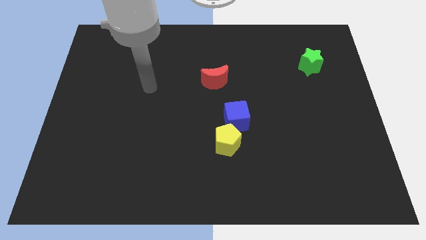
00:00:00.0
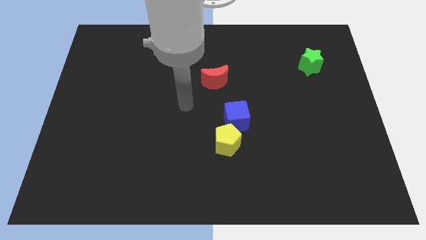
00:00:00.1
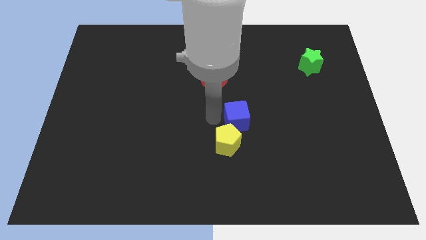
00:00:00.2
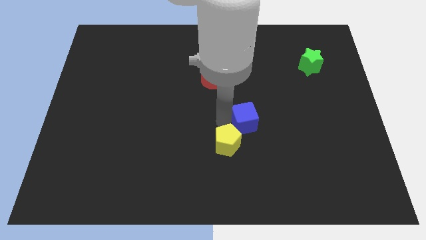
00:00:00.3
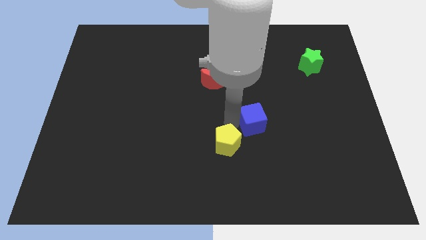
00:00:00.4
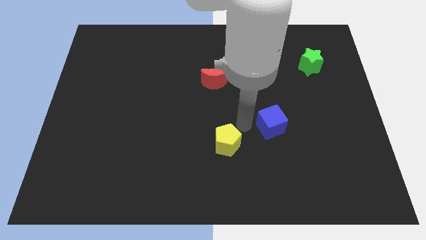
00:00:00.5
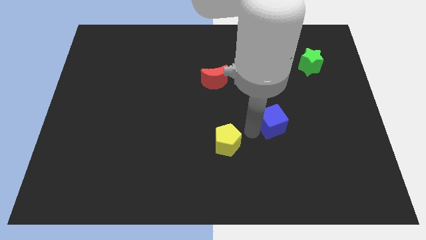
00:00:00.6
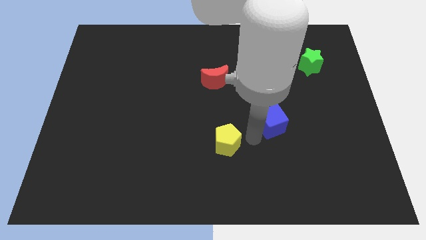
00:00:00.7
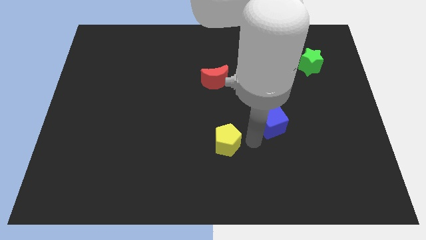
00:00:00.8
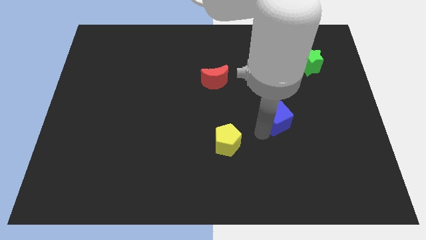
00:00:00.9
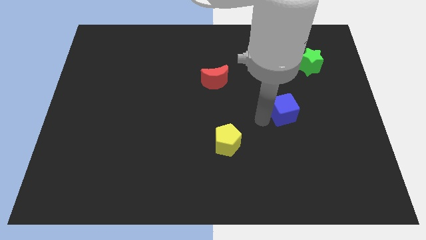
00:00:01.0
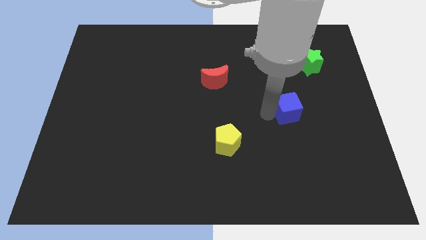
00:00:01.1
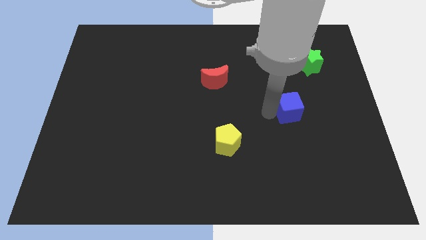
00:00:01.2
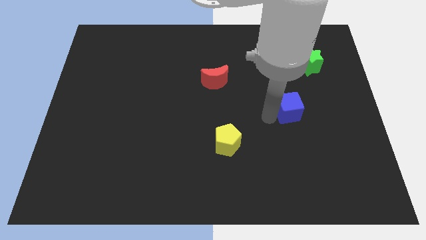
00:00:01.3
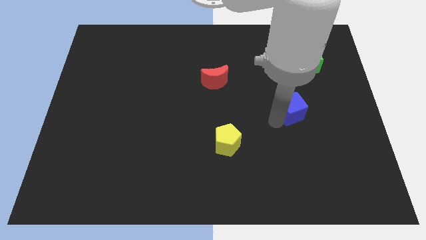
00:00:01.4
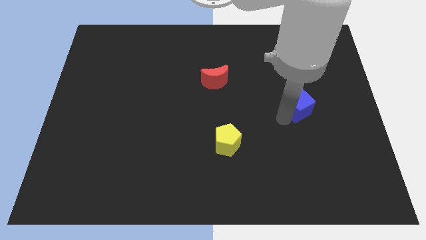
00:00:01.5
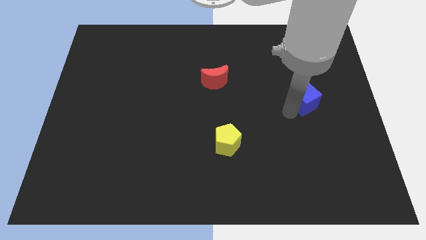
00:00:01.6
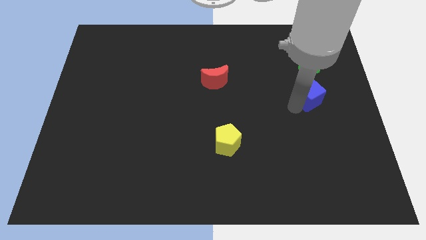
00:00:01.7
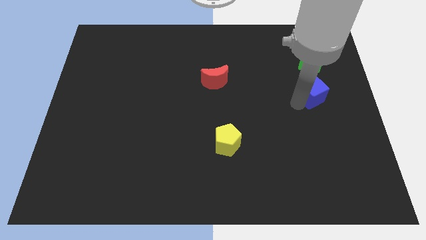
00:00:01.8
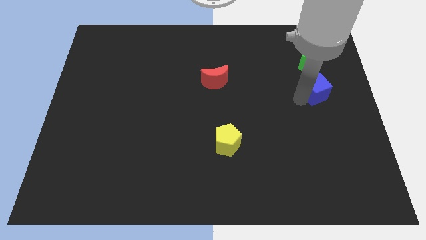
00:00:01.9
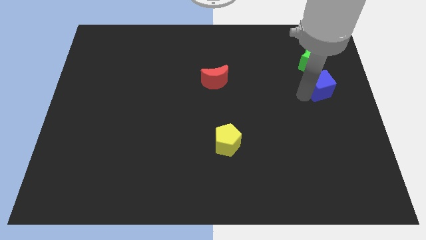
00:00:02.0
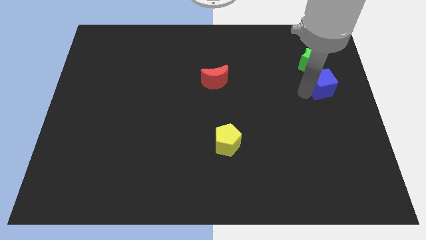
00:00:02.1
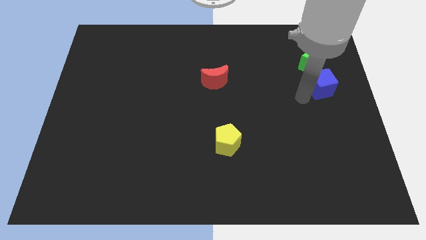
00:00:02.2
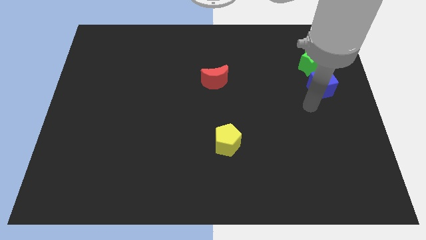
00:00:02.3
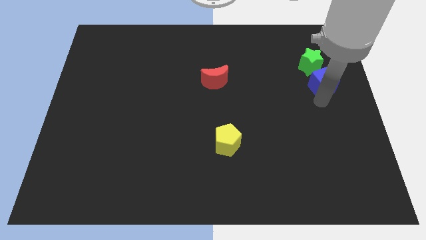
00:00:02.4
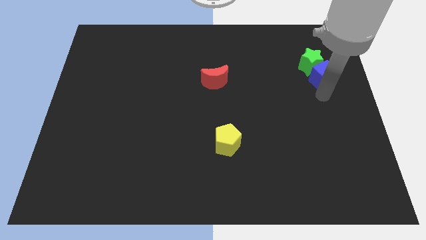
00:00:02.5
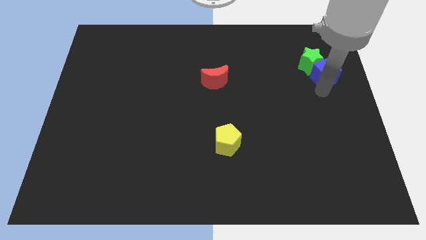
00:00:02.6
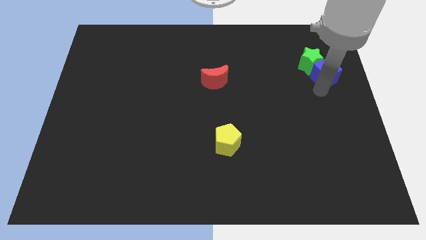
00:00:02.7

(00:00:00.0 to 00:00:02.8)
push the blue block towards the star

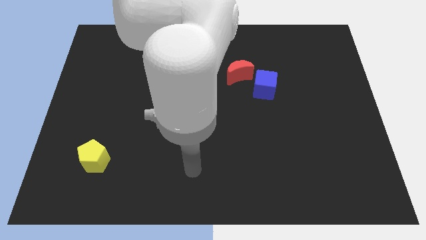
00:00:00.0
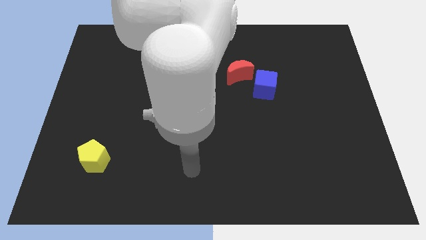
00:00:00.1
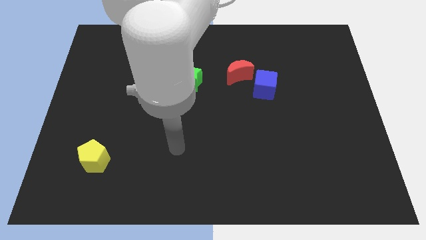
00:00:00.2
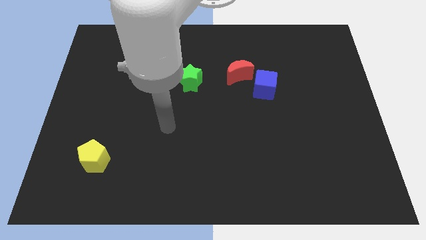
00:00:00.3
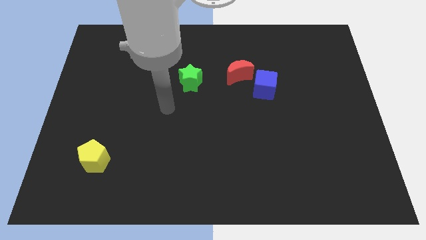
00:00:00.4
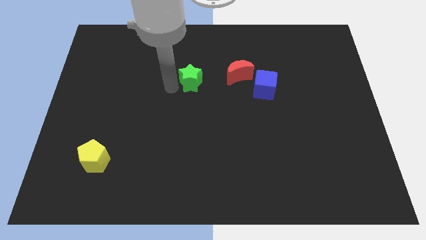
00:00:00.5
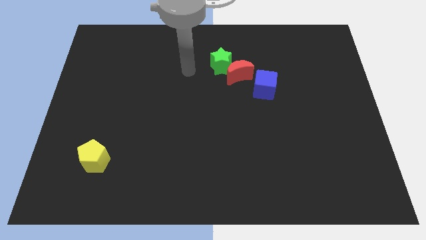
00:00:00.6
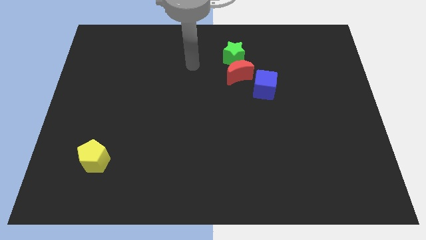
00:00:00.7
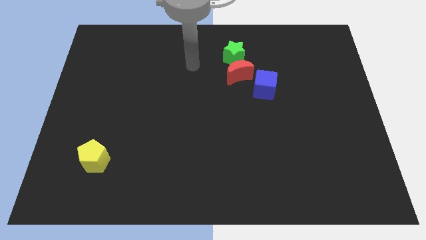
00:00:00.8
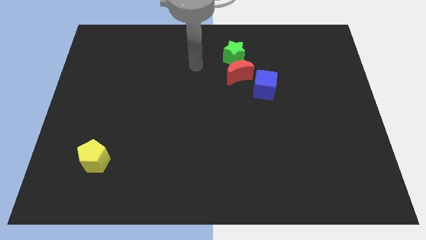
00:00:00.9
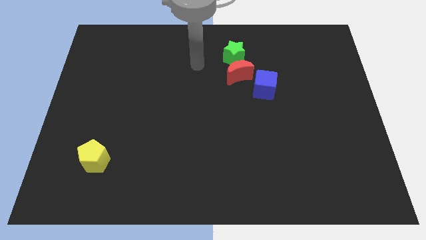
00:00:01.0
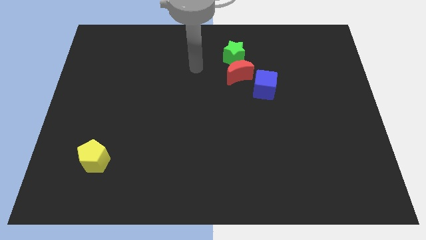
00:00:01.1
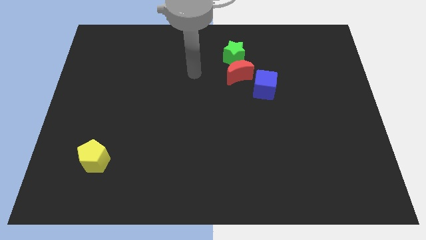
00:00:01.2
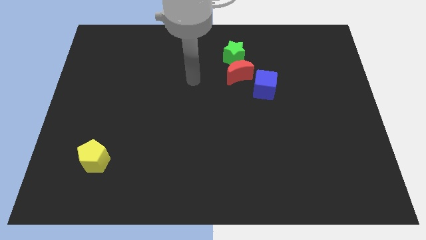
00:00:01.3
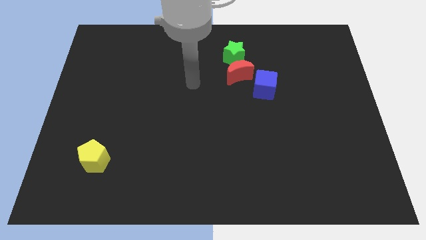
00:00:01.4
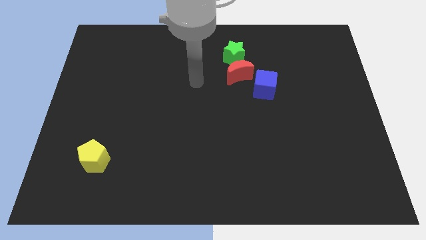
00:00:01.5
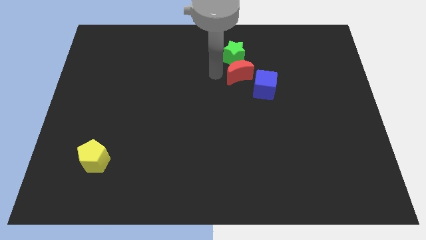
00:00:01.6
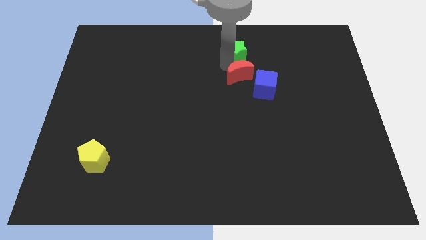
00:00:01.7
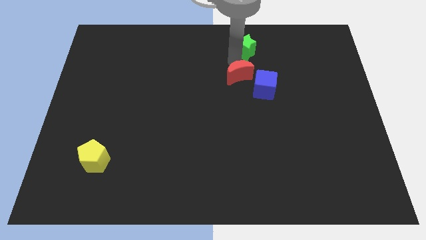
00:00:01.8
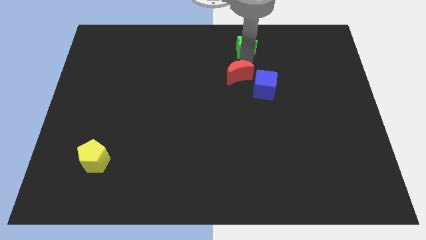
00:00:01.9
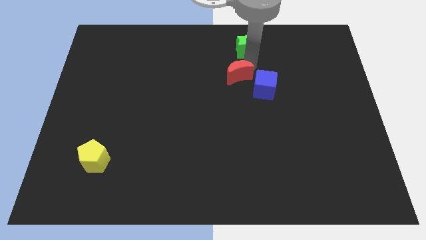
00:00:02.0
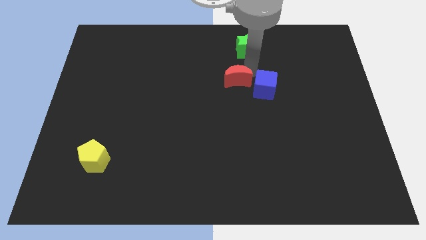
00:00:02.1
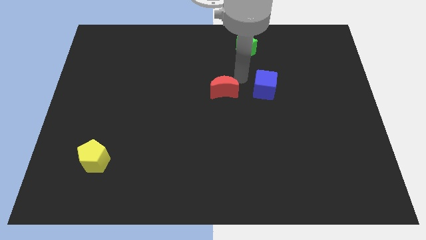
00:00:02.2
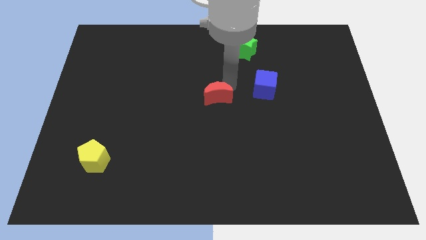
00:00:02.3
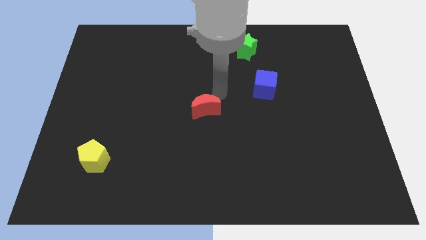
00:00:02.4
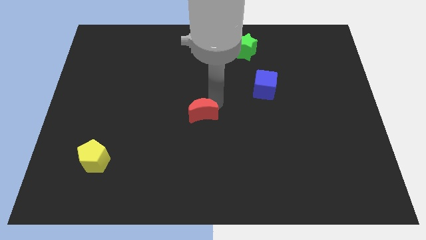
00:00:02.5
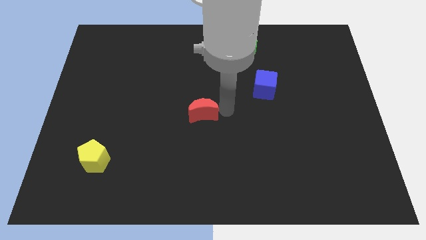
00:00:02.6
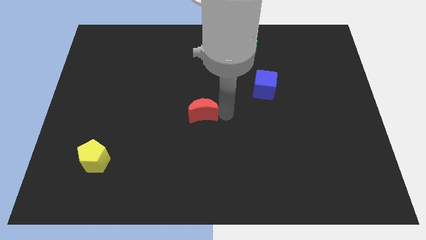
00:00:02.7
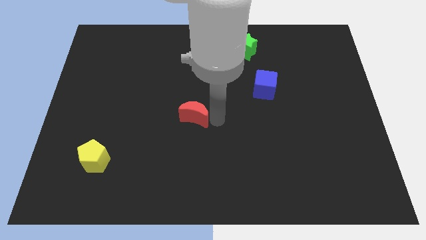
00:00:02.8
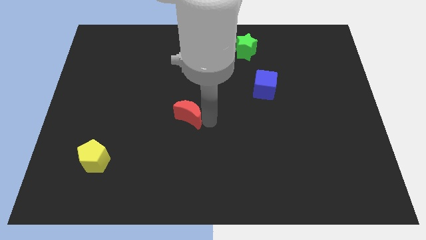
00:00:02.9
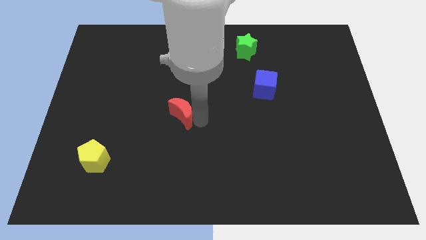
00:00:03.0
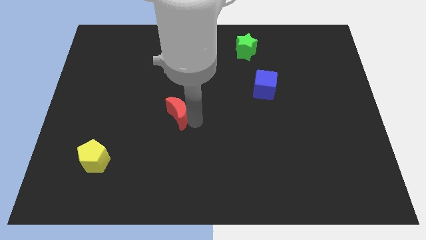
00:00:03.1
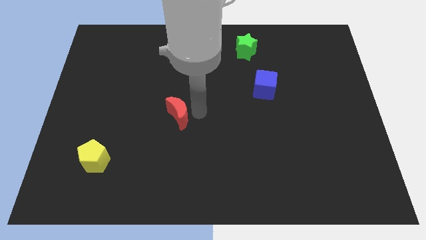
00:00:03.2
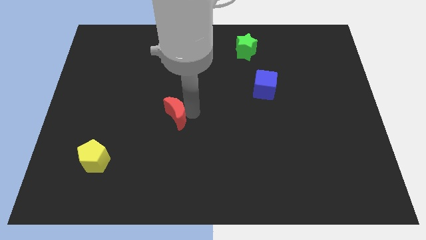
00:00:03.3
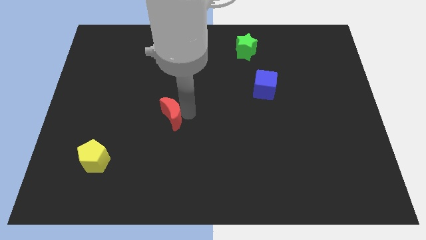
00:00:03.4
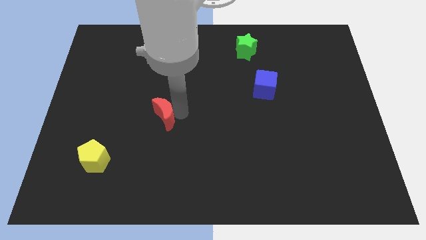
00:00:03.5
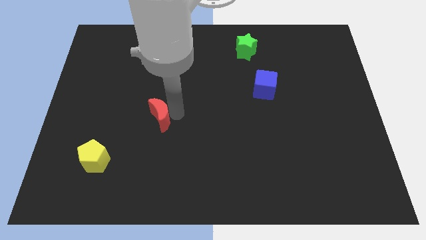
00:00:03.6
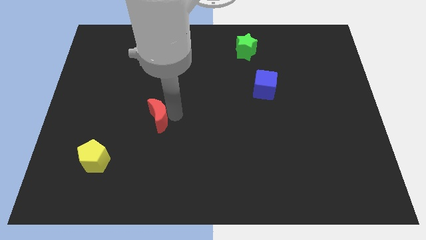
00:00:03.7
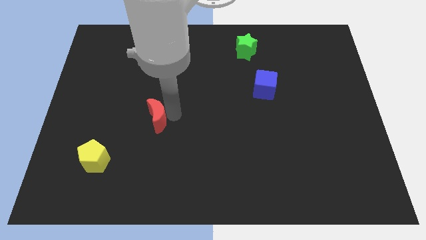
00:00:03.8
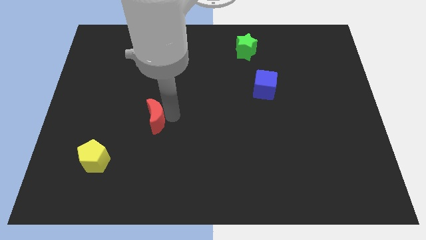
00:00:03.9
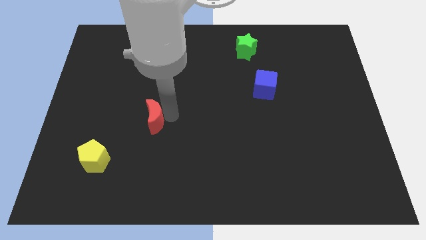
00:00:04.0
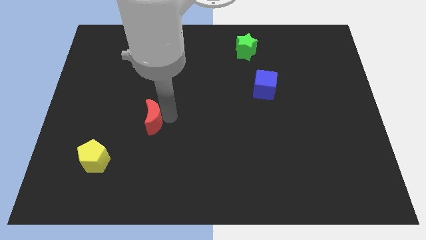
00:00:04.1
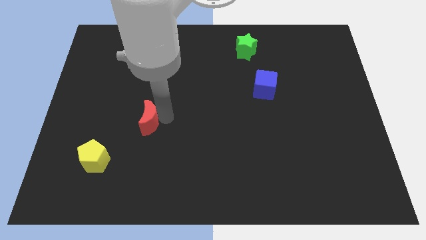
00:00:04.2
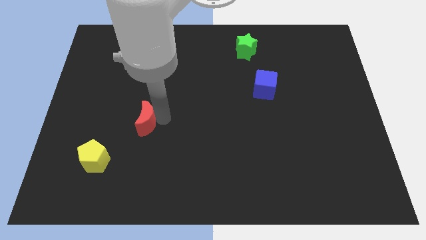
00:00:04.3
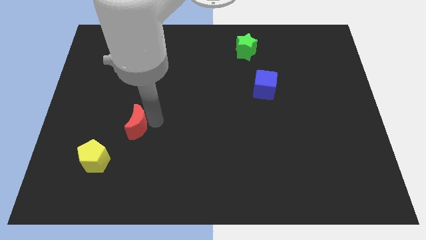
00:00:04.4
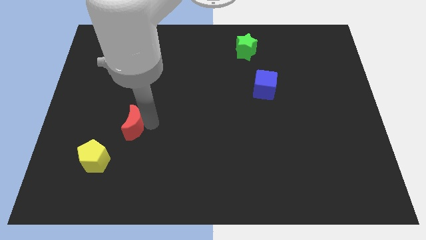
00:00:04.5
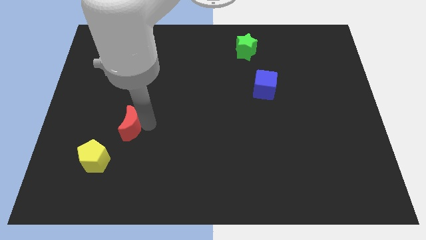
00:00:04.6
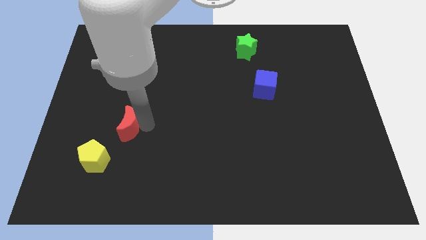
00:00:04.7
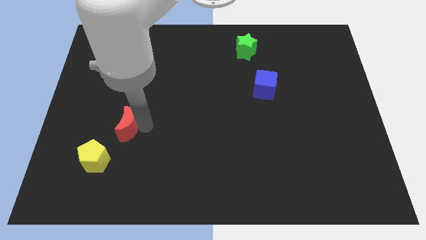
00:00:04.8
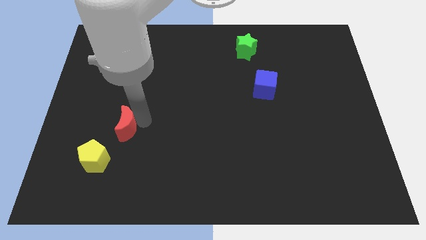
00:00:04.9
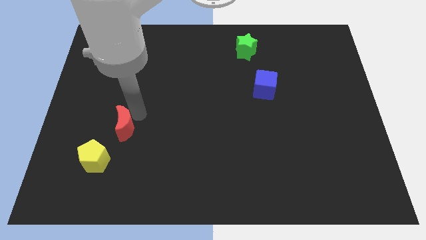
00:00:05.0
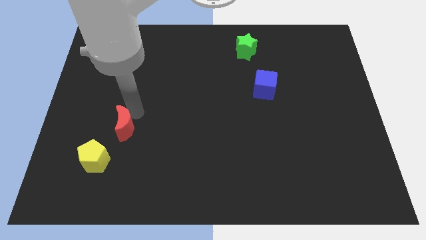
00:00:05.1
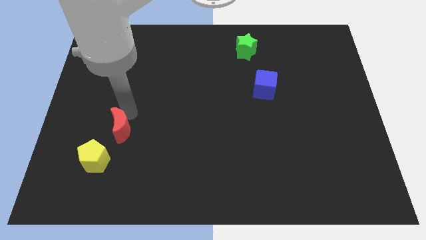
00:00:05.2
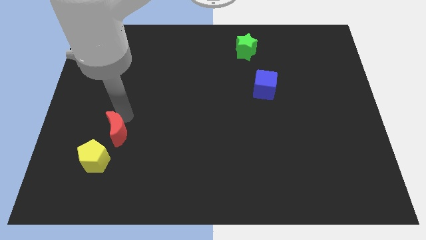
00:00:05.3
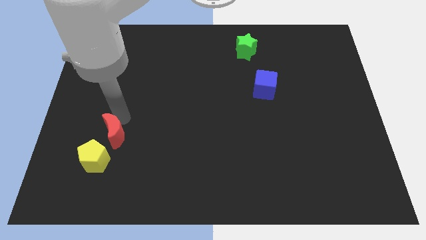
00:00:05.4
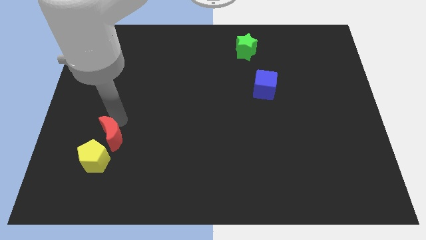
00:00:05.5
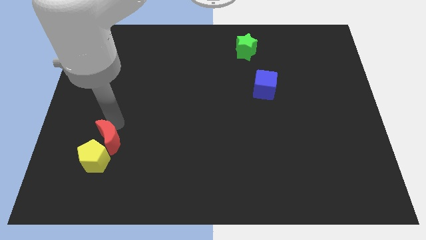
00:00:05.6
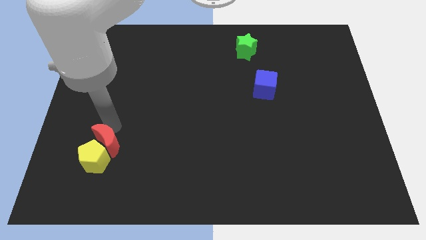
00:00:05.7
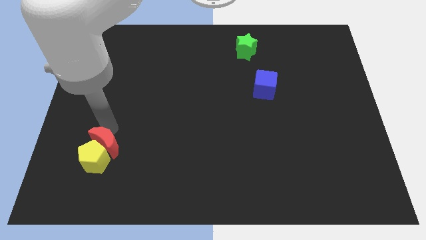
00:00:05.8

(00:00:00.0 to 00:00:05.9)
push the red block close to the pentagon

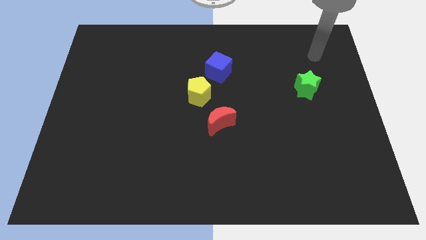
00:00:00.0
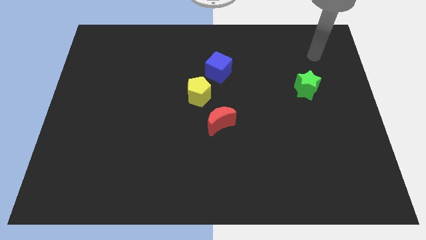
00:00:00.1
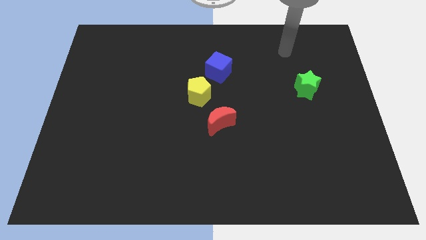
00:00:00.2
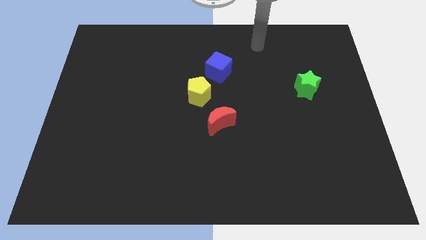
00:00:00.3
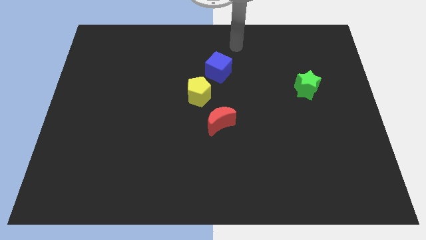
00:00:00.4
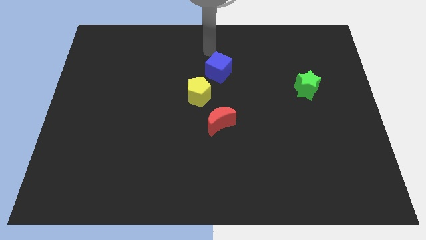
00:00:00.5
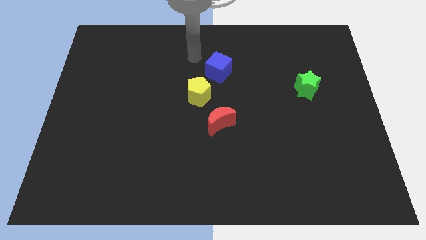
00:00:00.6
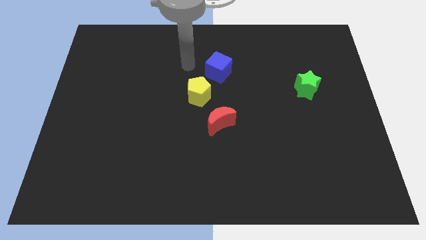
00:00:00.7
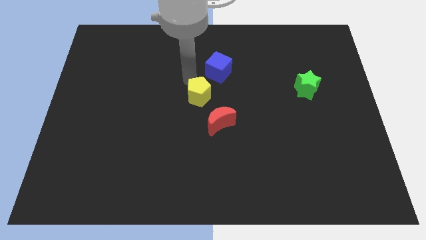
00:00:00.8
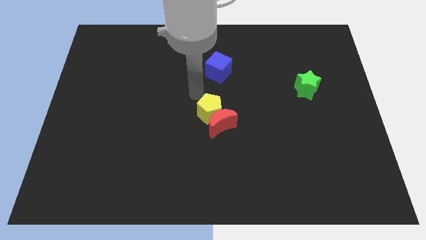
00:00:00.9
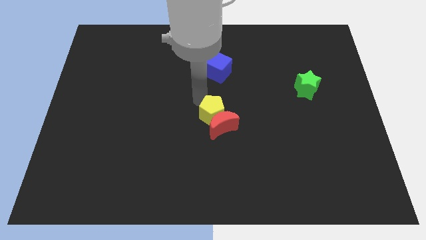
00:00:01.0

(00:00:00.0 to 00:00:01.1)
move the yellow pentagon towards the moon
